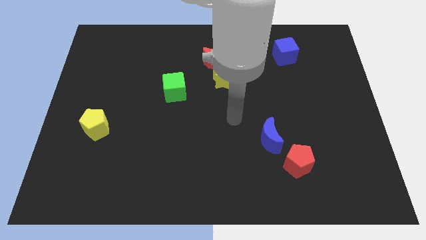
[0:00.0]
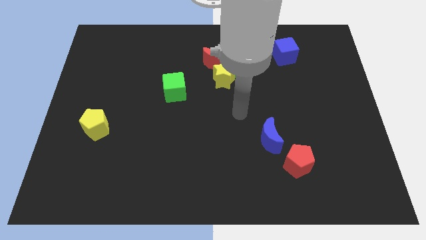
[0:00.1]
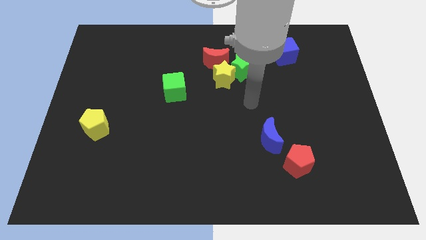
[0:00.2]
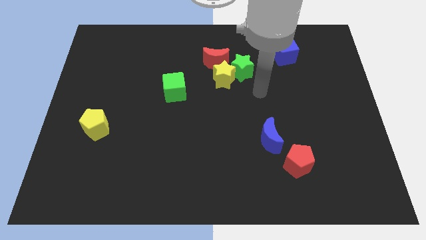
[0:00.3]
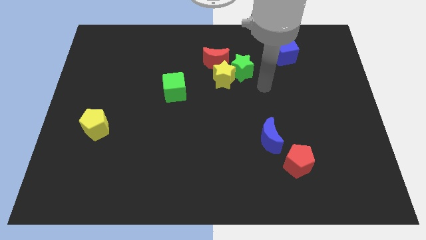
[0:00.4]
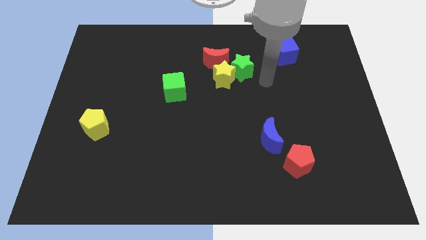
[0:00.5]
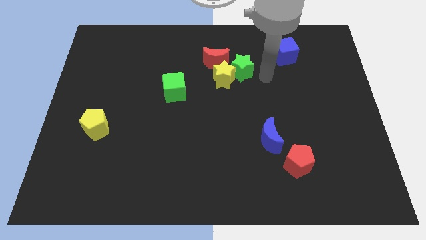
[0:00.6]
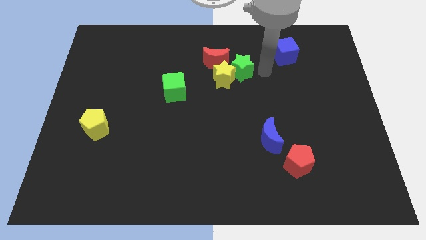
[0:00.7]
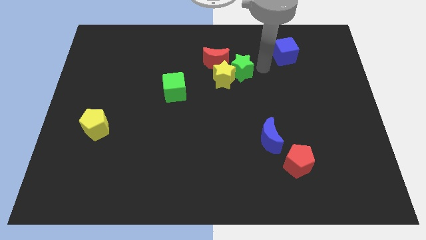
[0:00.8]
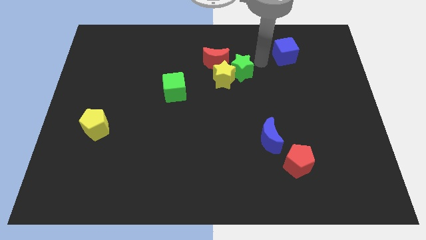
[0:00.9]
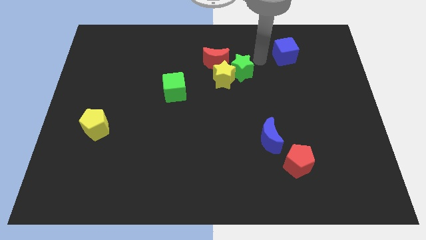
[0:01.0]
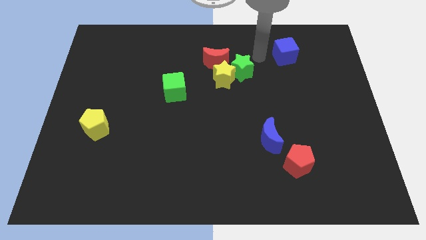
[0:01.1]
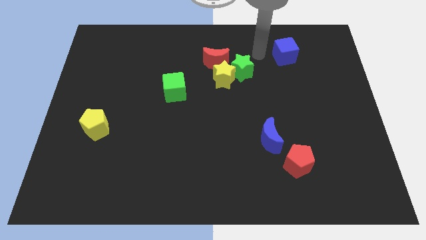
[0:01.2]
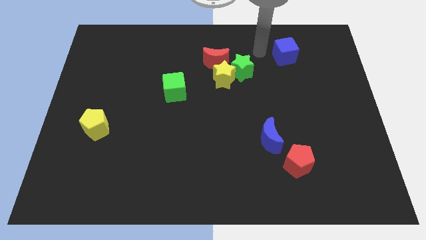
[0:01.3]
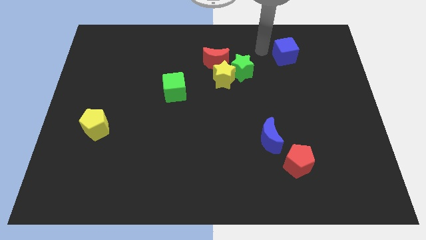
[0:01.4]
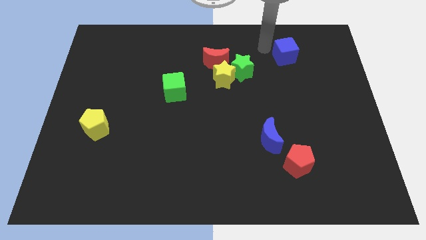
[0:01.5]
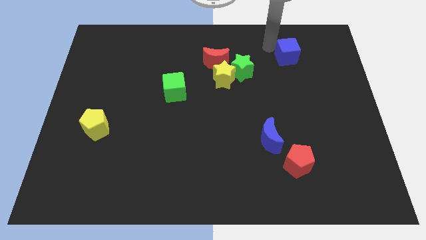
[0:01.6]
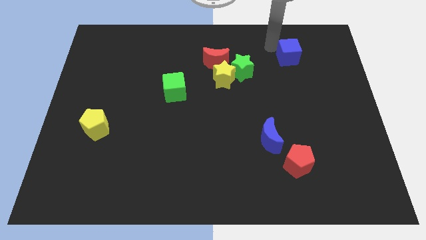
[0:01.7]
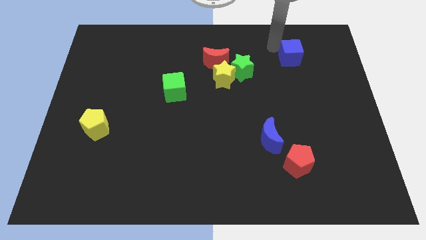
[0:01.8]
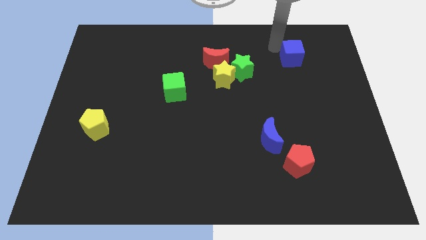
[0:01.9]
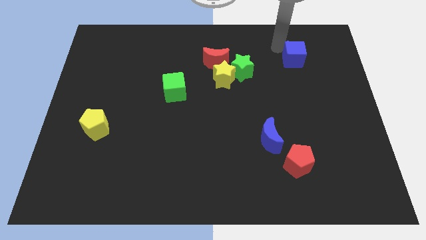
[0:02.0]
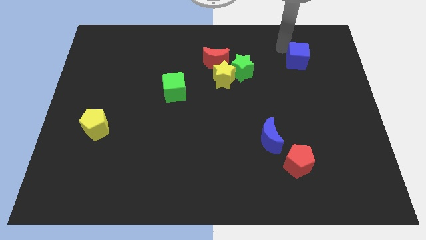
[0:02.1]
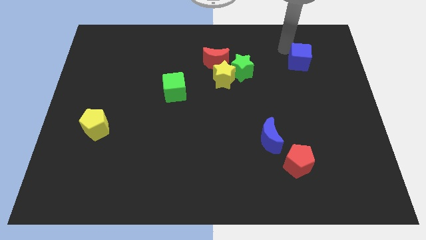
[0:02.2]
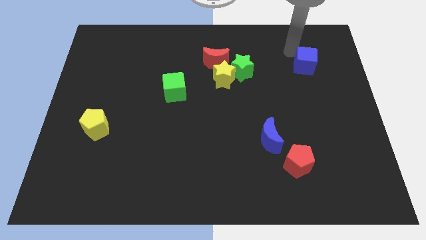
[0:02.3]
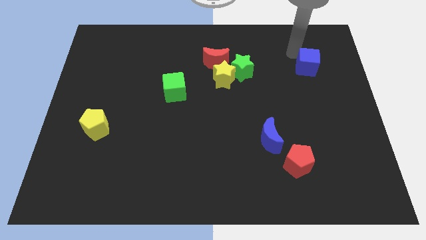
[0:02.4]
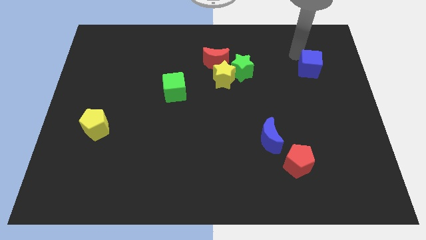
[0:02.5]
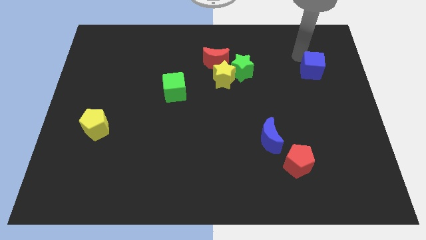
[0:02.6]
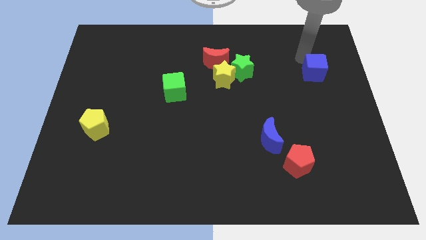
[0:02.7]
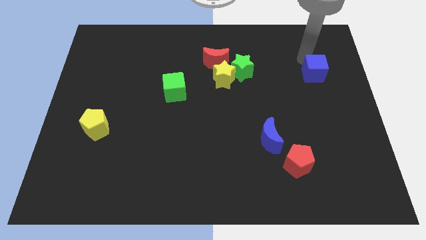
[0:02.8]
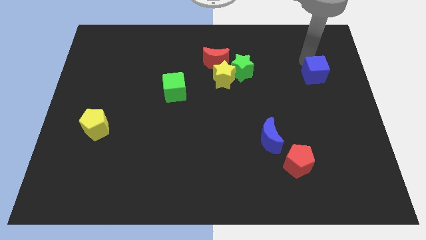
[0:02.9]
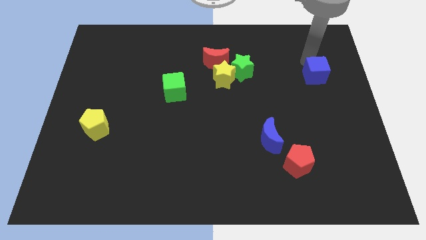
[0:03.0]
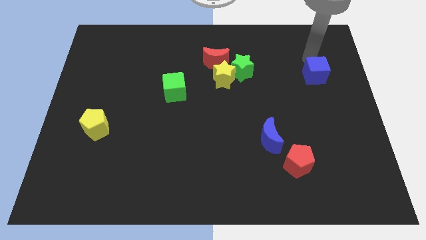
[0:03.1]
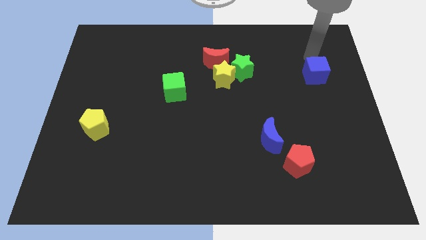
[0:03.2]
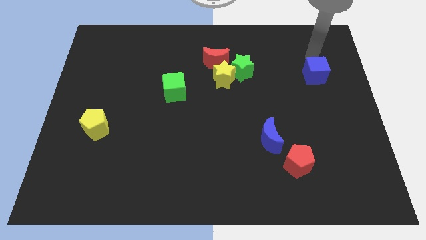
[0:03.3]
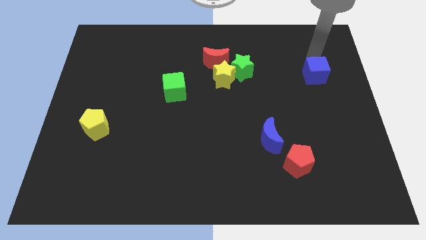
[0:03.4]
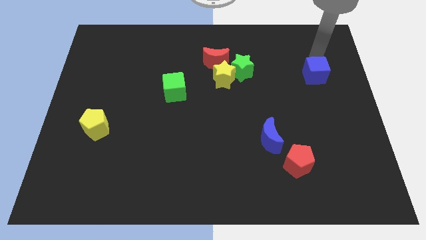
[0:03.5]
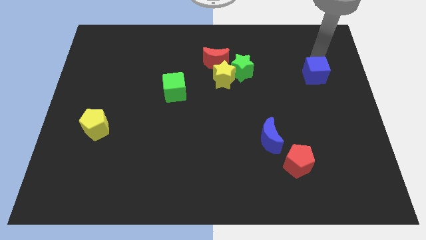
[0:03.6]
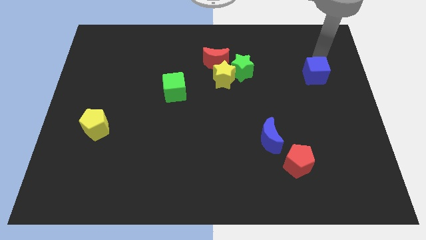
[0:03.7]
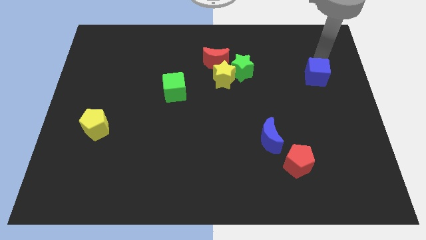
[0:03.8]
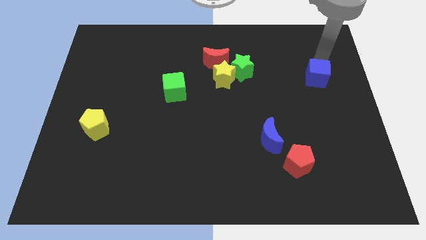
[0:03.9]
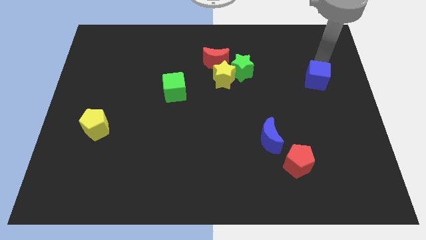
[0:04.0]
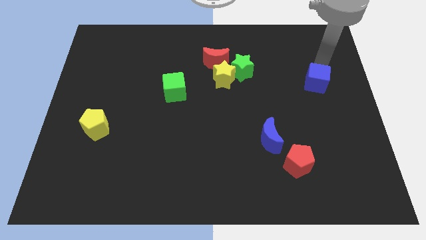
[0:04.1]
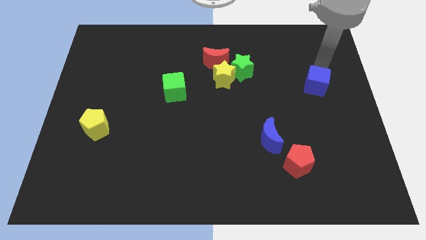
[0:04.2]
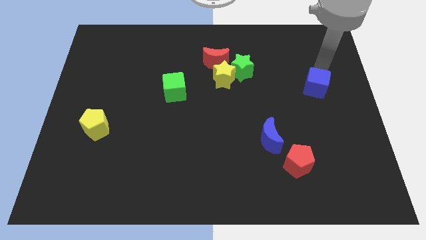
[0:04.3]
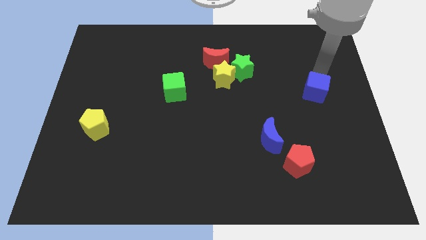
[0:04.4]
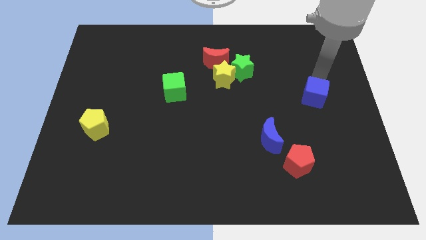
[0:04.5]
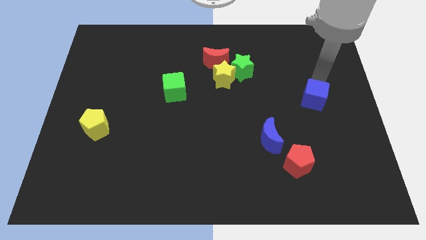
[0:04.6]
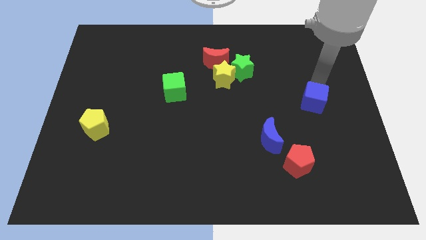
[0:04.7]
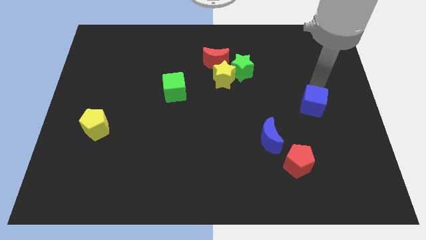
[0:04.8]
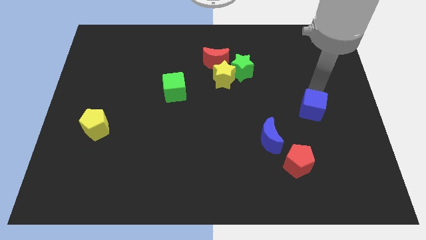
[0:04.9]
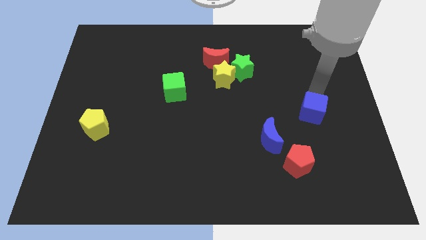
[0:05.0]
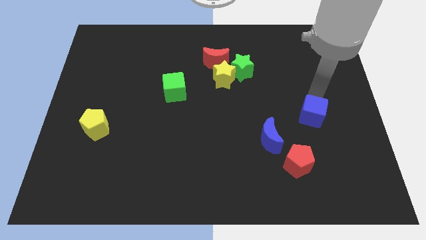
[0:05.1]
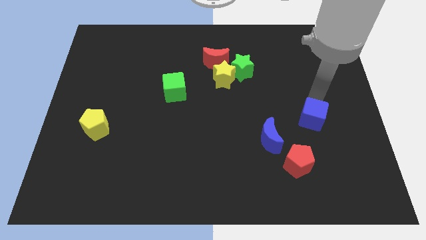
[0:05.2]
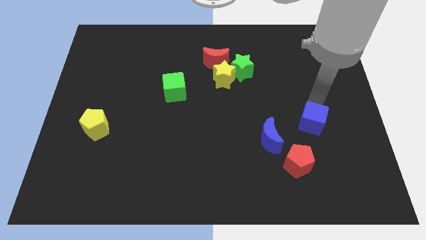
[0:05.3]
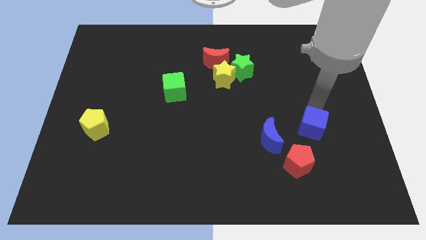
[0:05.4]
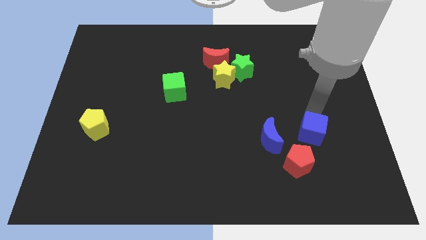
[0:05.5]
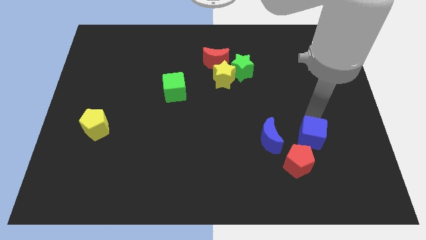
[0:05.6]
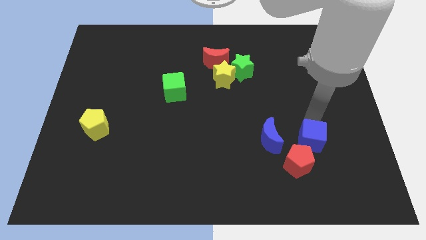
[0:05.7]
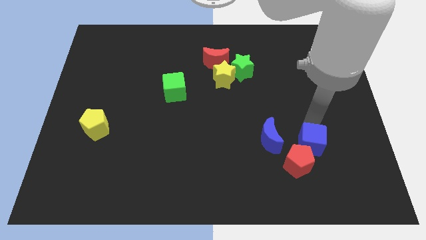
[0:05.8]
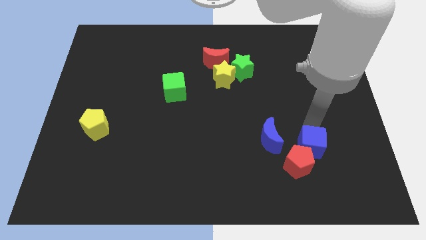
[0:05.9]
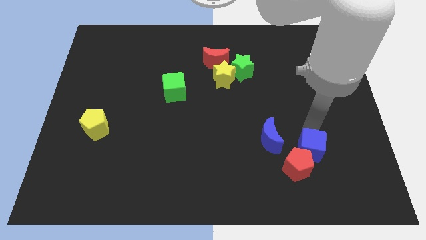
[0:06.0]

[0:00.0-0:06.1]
move the blue cube to the red pentagon

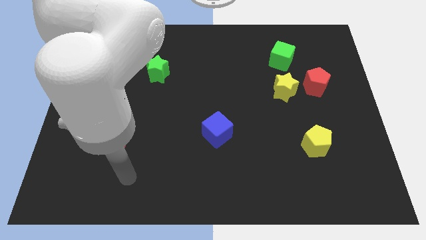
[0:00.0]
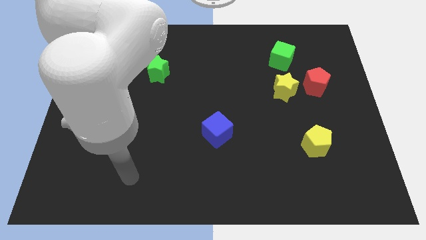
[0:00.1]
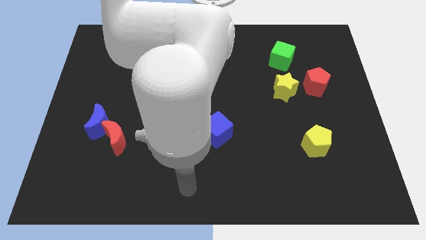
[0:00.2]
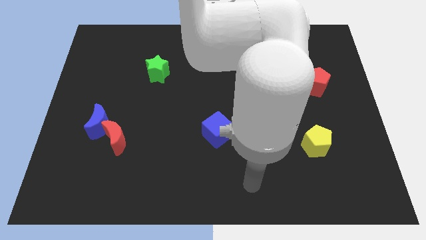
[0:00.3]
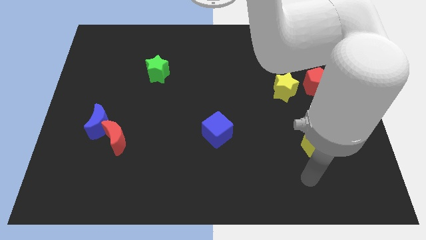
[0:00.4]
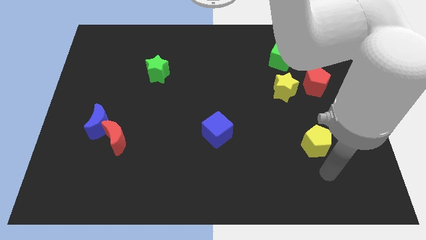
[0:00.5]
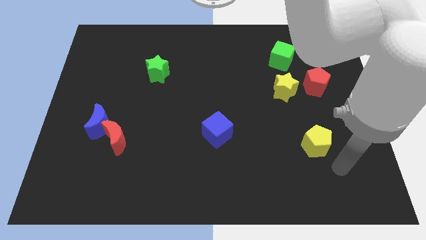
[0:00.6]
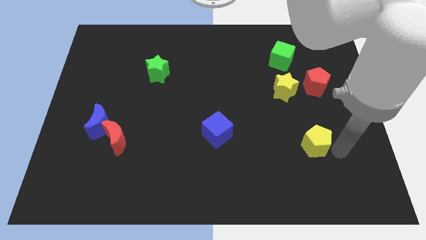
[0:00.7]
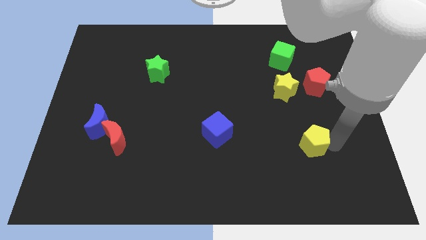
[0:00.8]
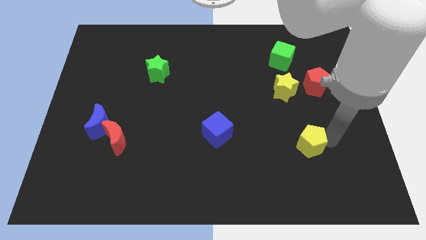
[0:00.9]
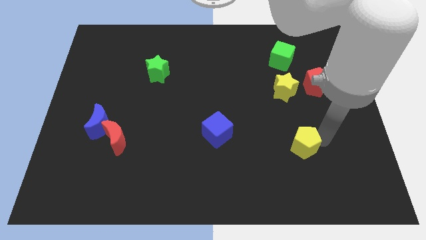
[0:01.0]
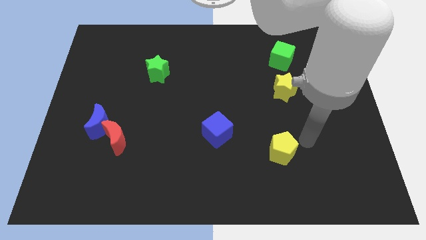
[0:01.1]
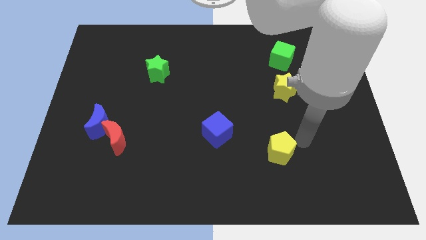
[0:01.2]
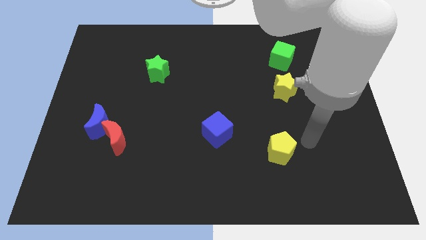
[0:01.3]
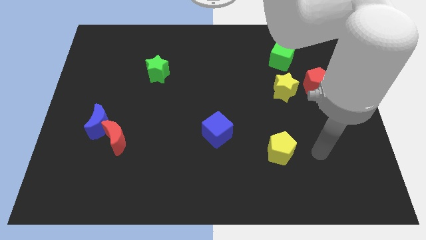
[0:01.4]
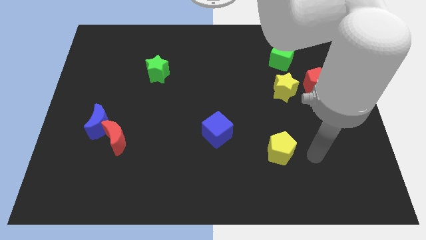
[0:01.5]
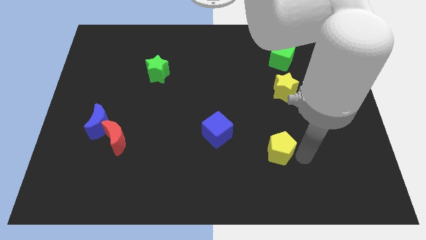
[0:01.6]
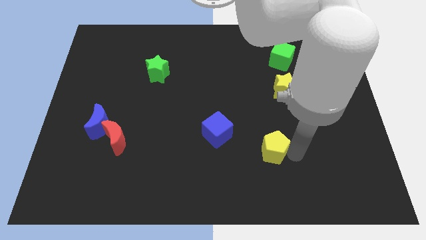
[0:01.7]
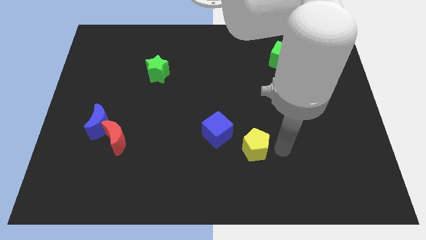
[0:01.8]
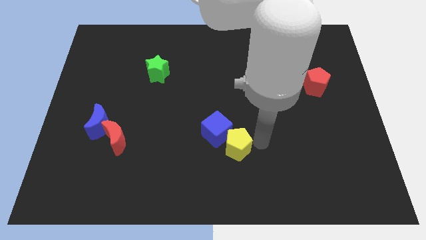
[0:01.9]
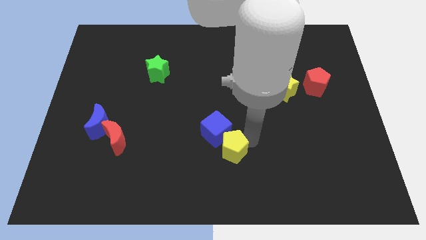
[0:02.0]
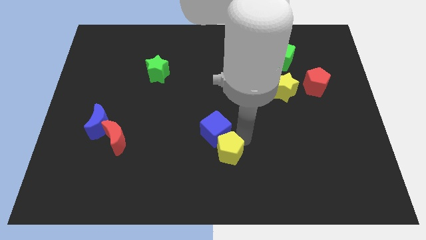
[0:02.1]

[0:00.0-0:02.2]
move the yellow pentagon to the blue cube

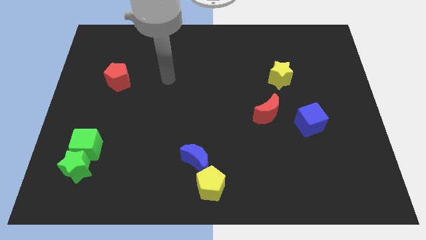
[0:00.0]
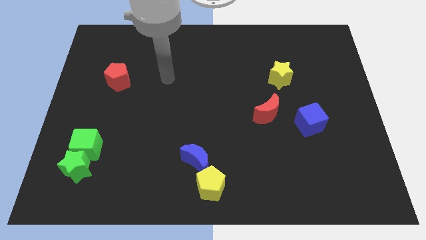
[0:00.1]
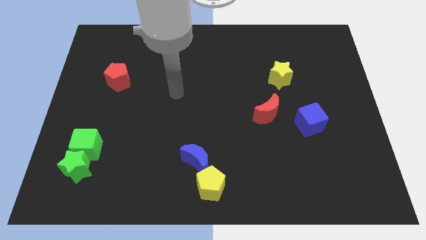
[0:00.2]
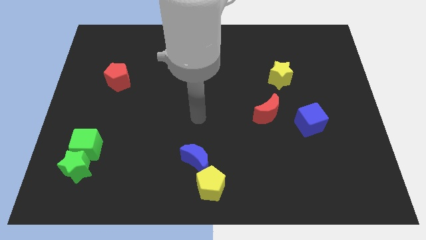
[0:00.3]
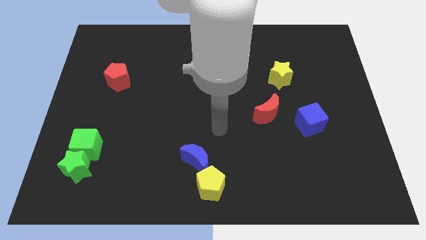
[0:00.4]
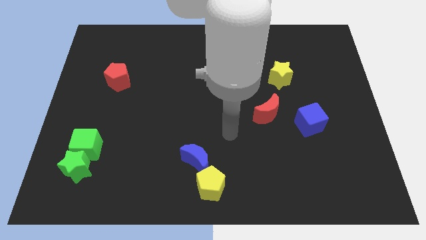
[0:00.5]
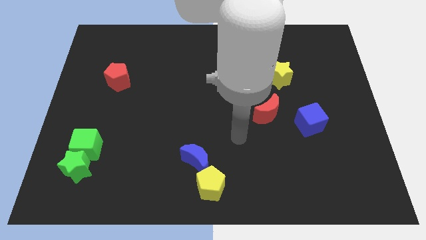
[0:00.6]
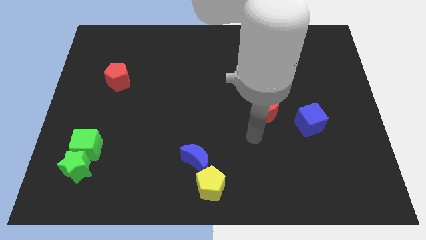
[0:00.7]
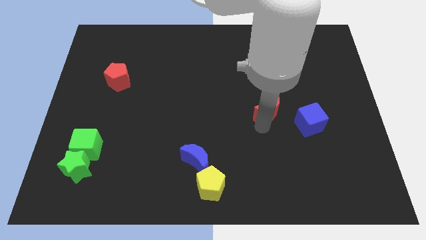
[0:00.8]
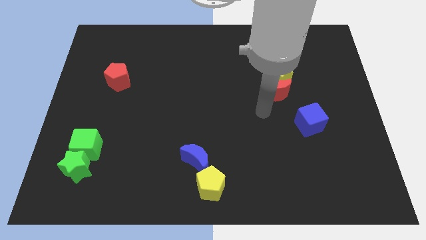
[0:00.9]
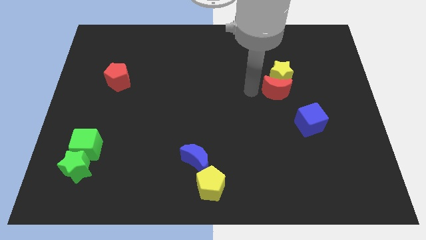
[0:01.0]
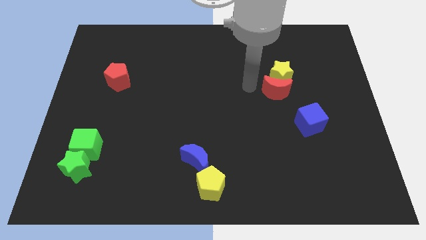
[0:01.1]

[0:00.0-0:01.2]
slide the red moon towards the yellow star
